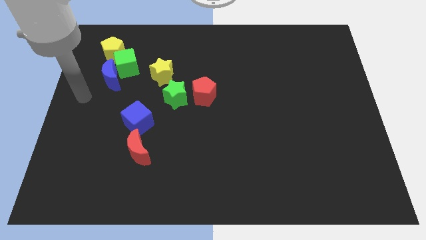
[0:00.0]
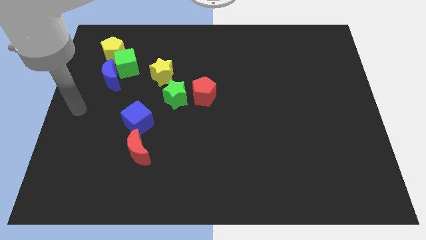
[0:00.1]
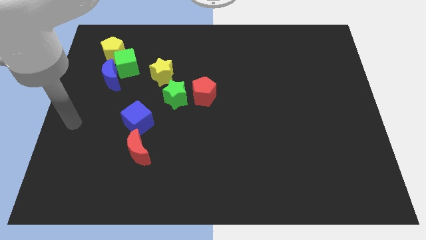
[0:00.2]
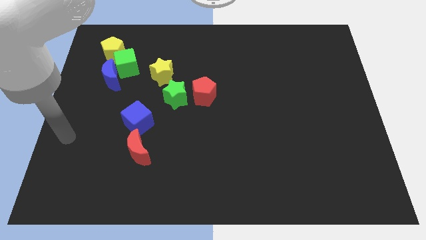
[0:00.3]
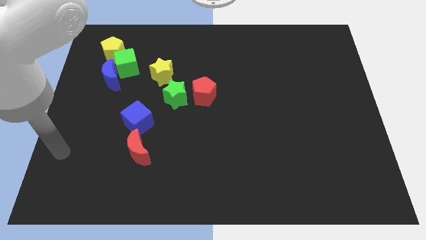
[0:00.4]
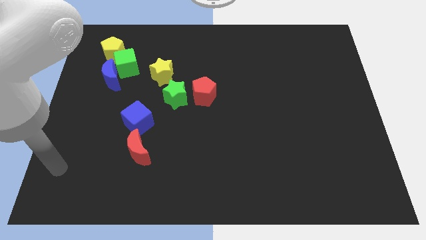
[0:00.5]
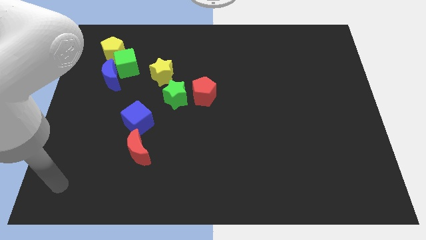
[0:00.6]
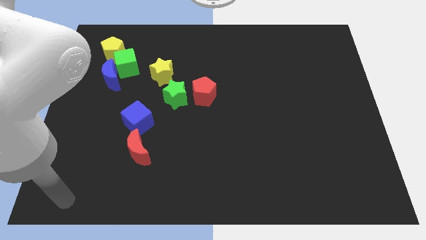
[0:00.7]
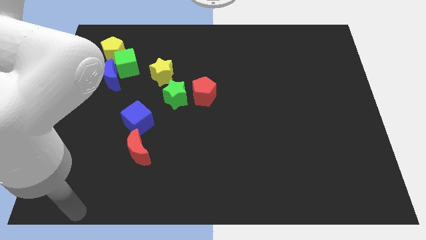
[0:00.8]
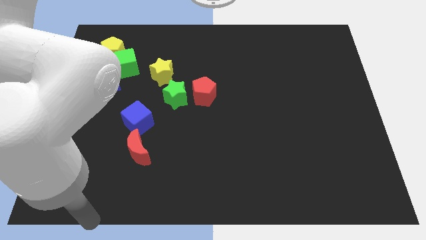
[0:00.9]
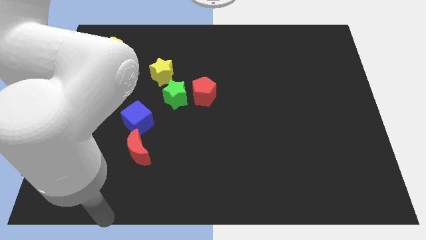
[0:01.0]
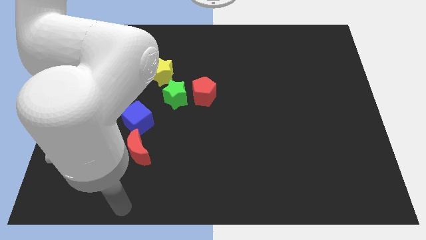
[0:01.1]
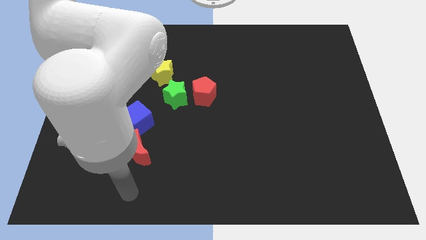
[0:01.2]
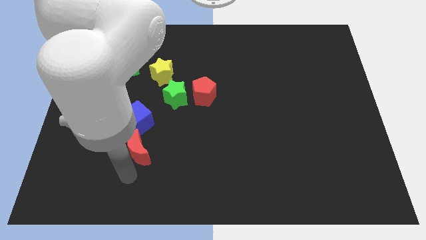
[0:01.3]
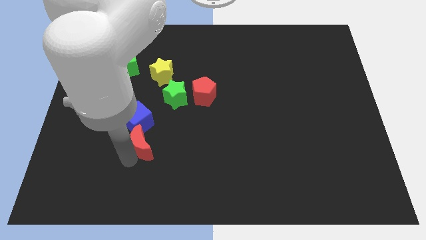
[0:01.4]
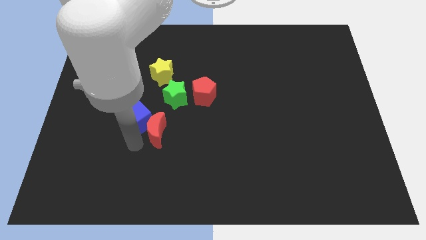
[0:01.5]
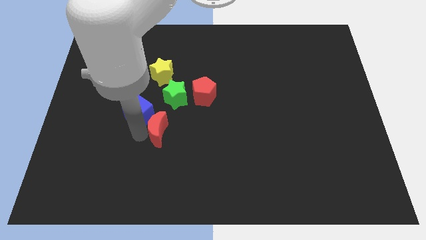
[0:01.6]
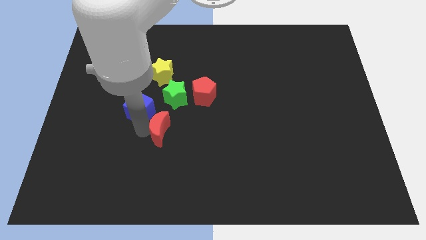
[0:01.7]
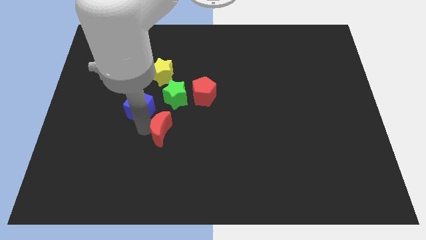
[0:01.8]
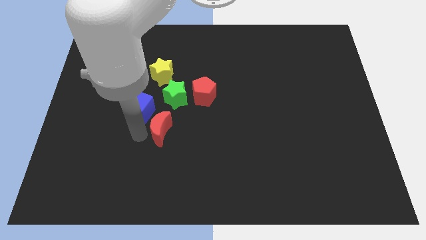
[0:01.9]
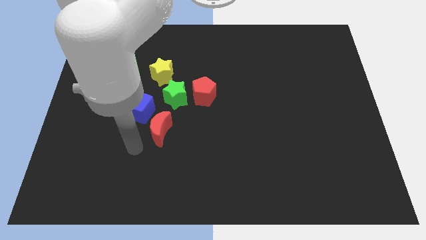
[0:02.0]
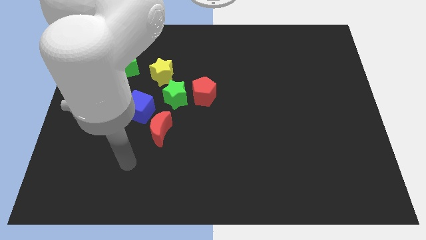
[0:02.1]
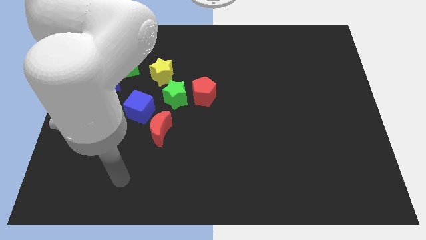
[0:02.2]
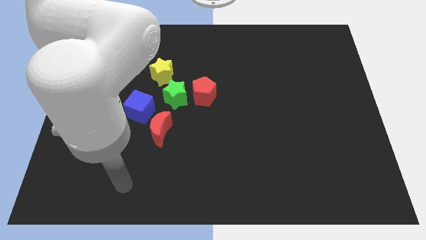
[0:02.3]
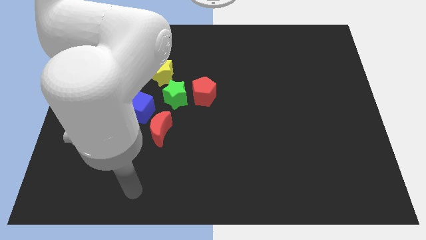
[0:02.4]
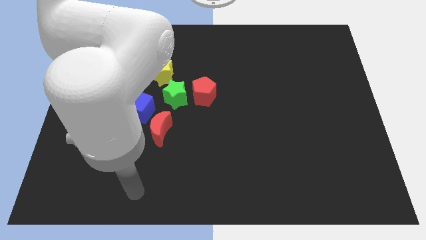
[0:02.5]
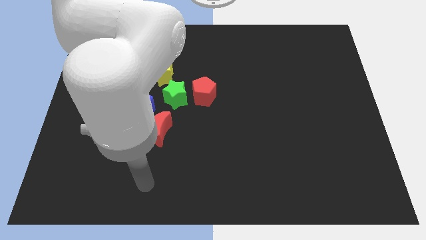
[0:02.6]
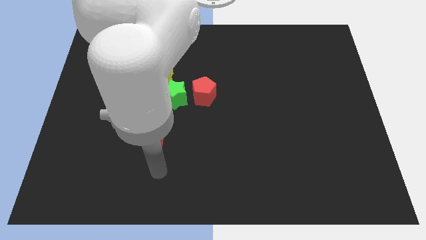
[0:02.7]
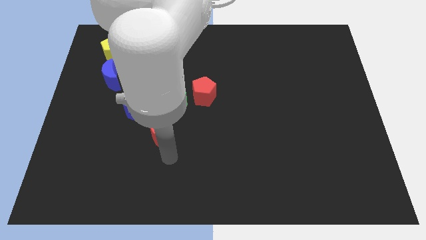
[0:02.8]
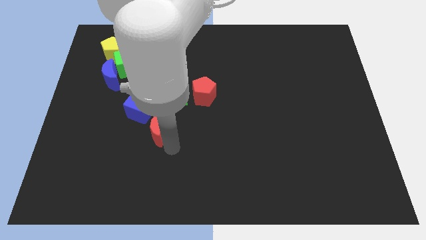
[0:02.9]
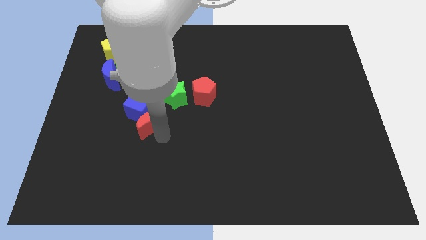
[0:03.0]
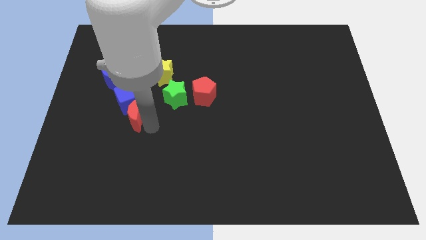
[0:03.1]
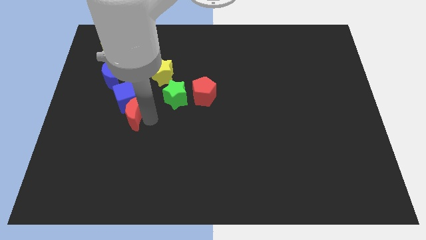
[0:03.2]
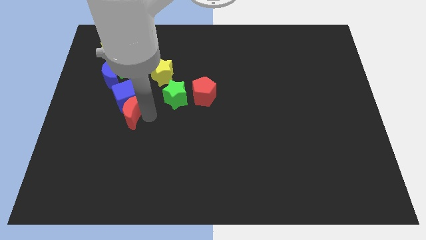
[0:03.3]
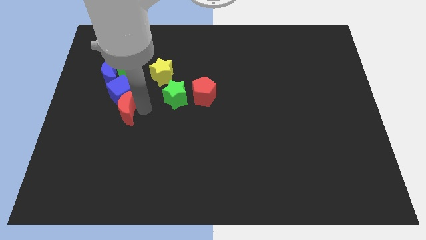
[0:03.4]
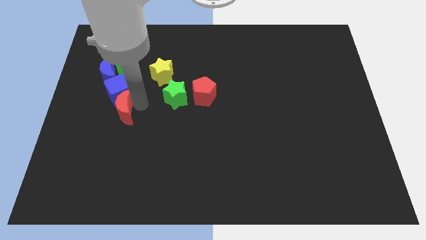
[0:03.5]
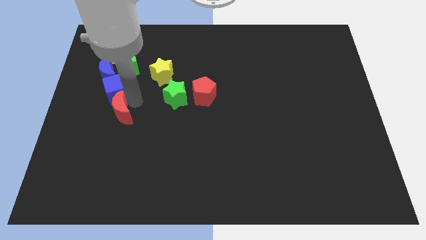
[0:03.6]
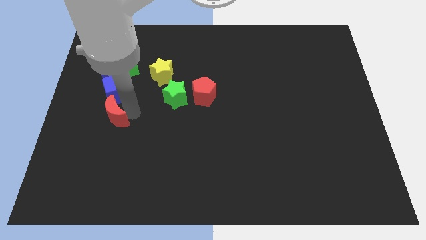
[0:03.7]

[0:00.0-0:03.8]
move the red crescent into the blue cube

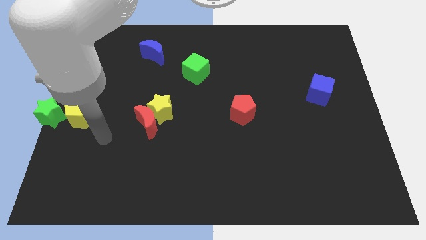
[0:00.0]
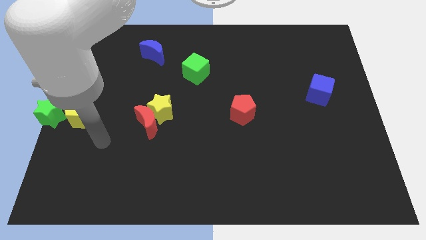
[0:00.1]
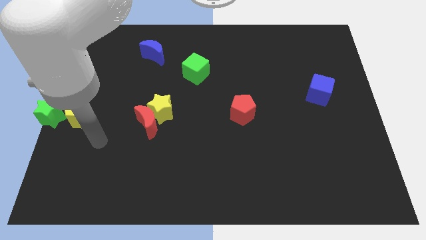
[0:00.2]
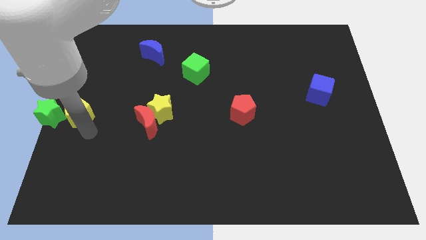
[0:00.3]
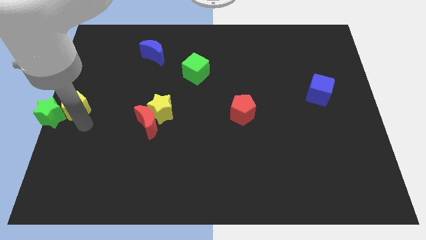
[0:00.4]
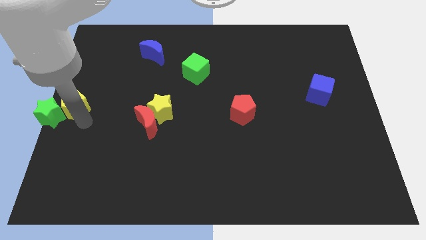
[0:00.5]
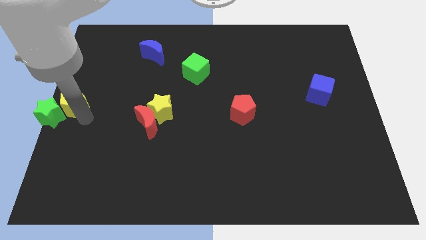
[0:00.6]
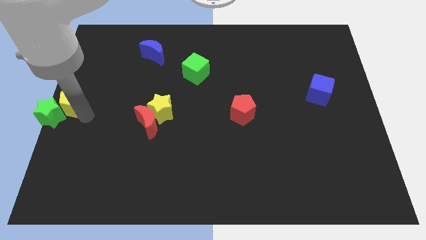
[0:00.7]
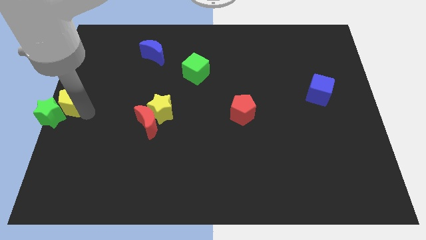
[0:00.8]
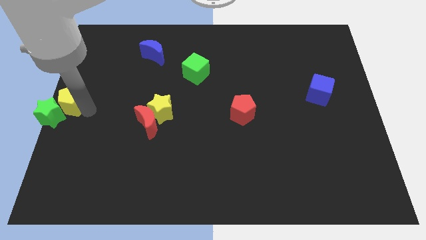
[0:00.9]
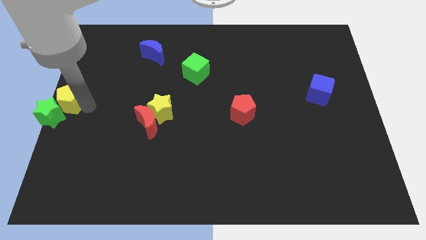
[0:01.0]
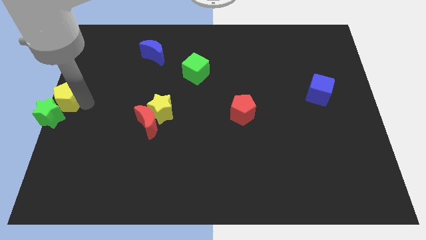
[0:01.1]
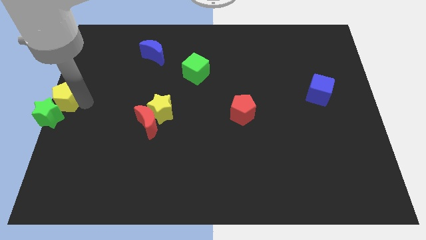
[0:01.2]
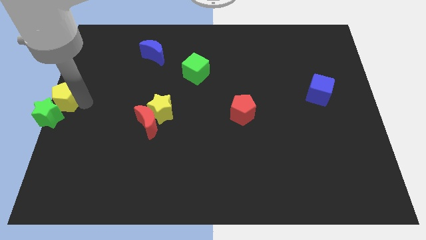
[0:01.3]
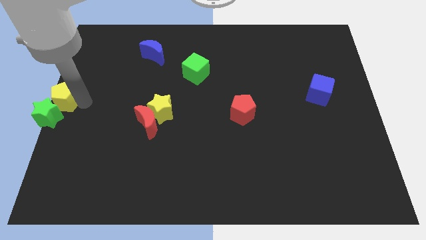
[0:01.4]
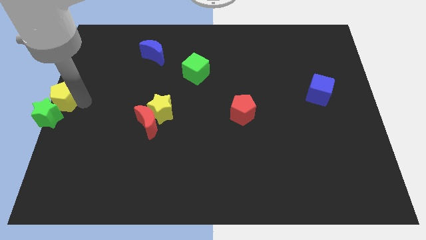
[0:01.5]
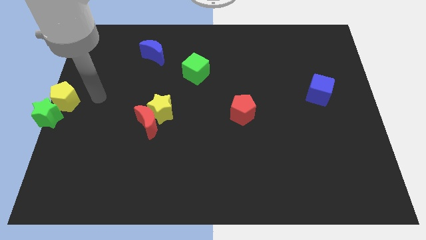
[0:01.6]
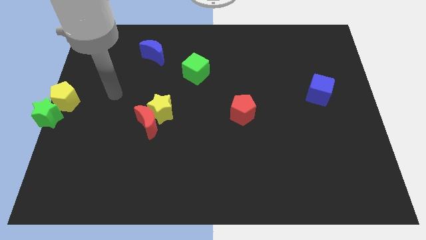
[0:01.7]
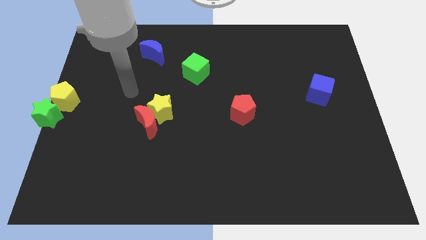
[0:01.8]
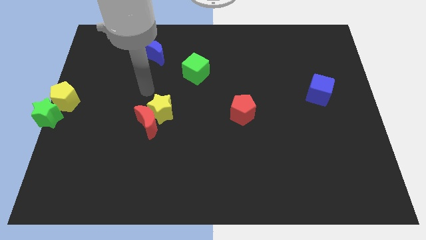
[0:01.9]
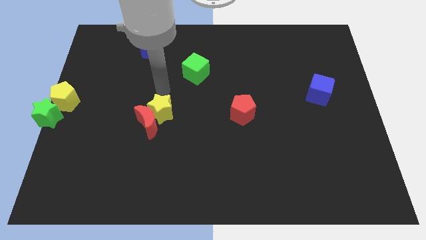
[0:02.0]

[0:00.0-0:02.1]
place the yellow pentagon above the green star

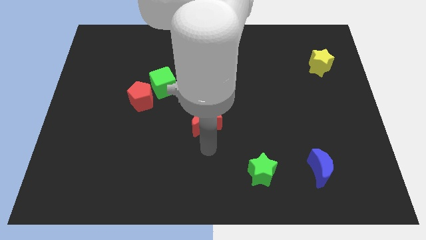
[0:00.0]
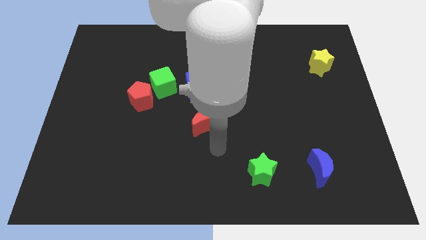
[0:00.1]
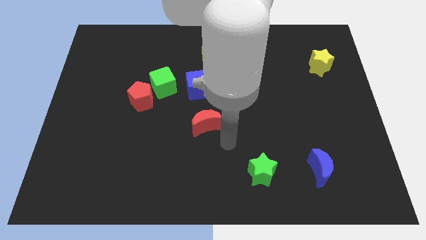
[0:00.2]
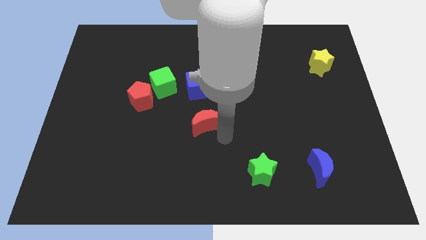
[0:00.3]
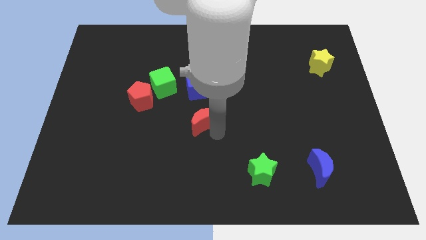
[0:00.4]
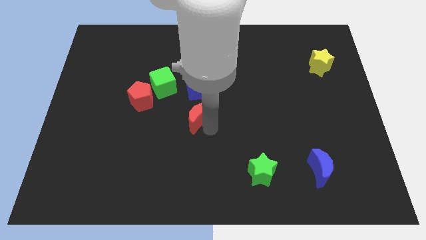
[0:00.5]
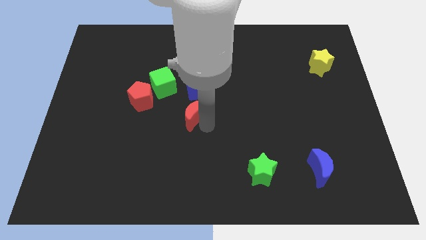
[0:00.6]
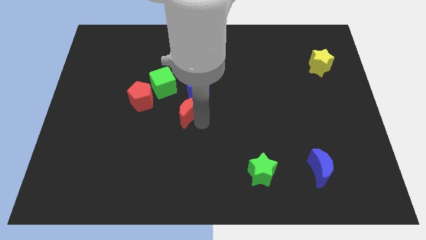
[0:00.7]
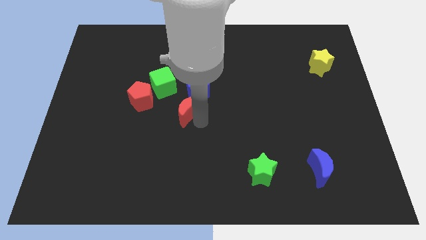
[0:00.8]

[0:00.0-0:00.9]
drag the red crescent towards the bottom of the blue cube

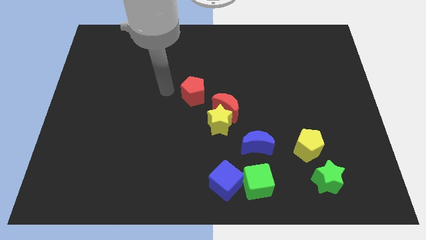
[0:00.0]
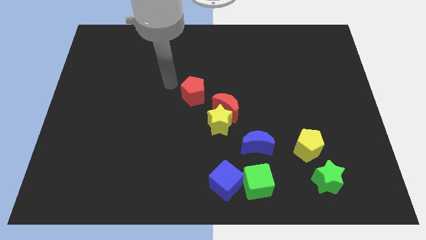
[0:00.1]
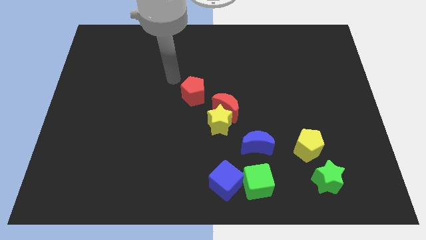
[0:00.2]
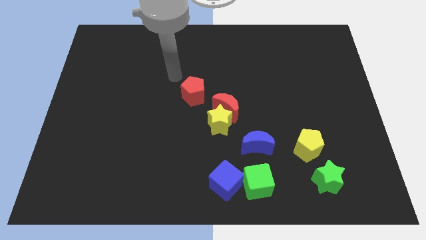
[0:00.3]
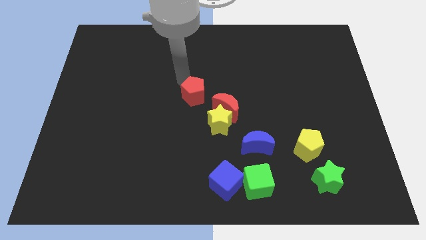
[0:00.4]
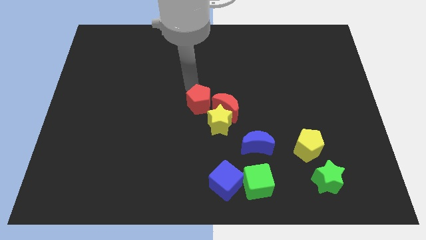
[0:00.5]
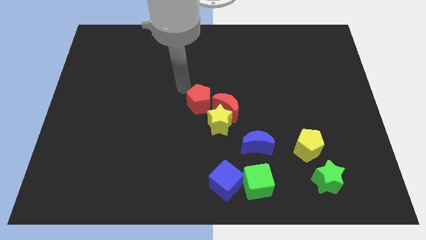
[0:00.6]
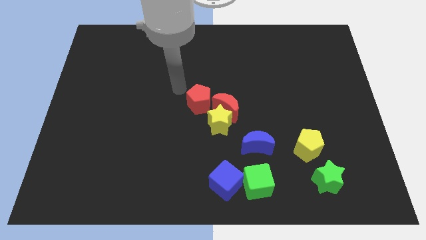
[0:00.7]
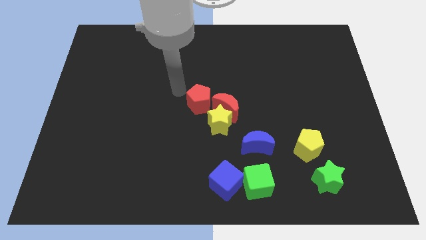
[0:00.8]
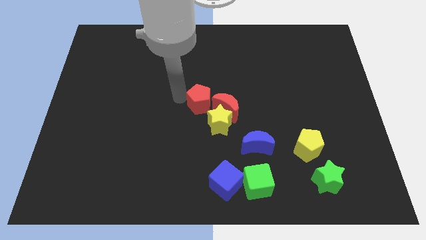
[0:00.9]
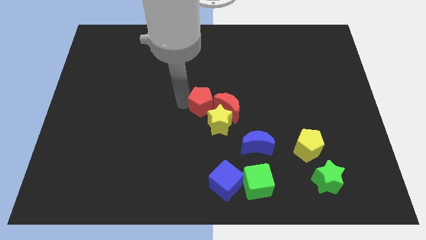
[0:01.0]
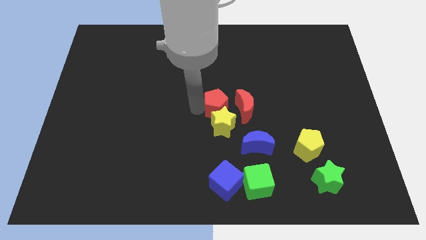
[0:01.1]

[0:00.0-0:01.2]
move the red pentagon into red crescent

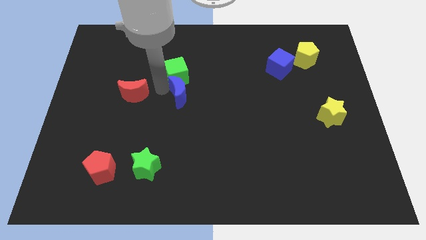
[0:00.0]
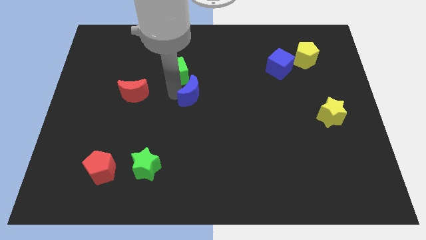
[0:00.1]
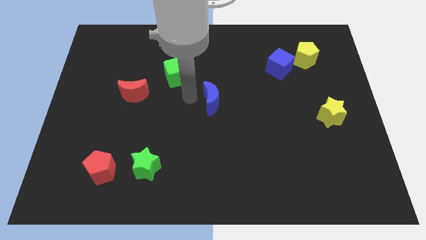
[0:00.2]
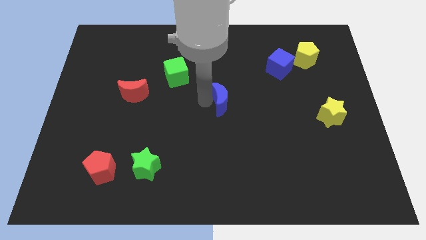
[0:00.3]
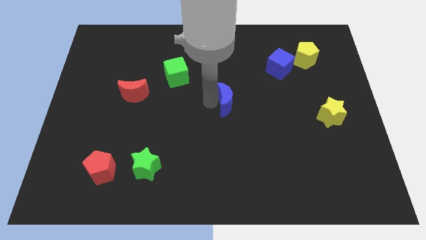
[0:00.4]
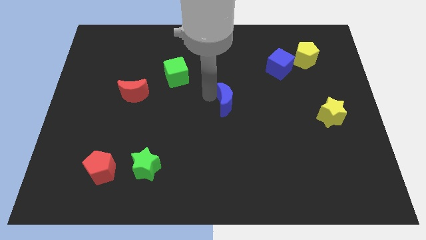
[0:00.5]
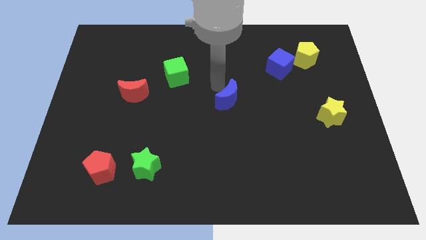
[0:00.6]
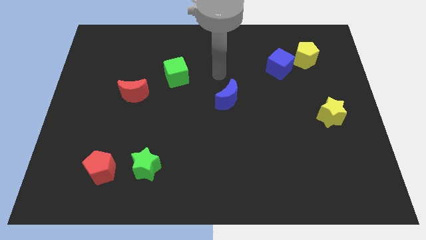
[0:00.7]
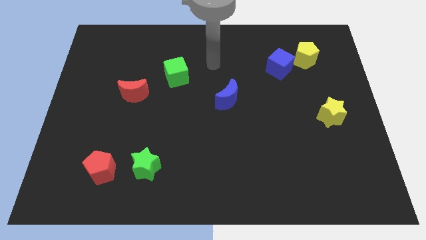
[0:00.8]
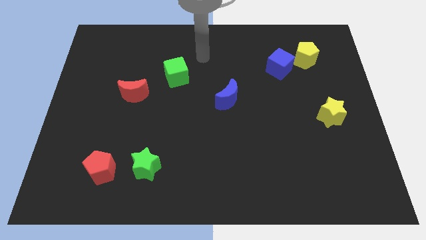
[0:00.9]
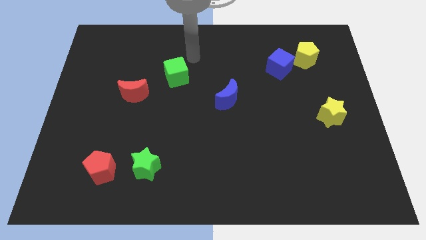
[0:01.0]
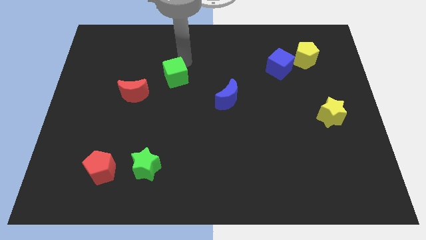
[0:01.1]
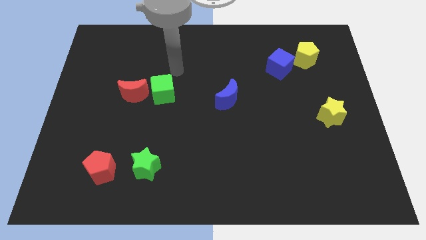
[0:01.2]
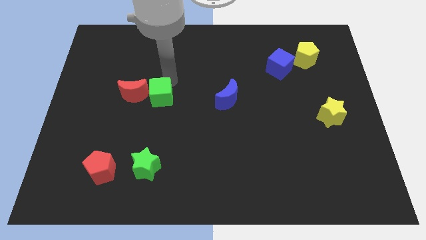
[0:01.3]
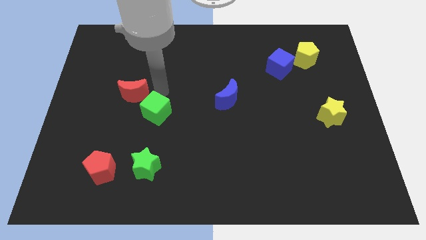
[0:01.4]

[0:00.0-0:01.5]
separate blue moon from green cube
